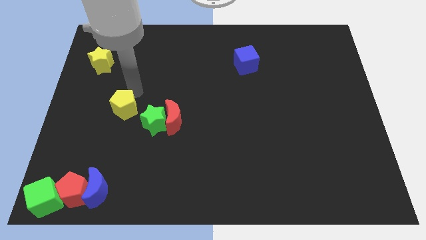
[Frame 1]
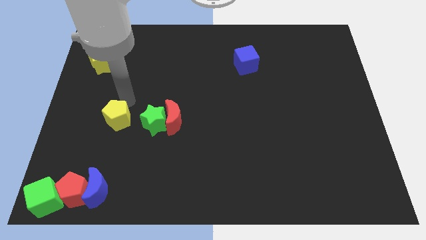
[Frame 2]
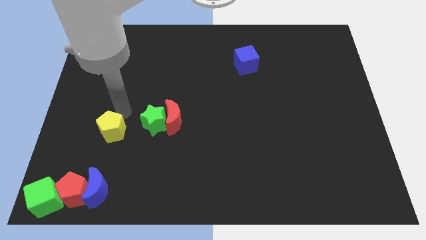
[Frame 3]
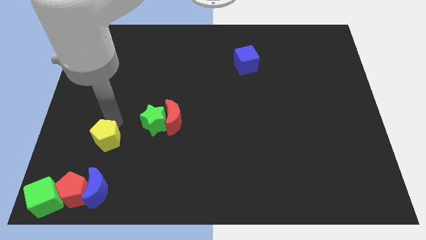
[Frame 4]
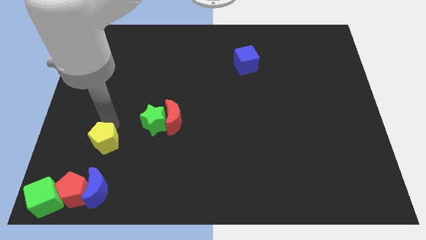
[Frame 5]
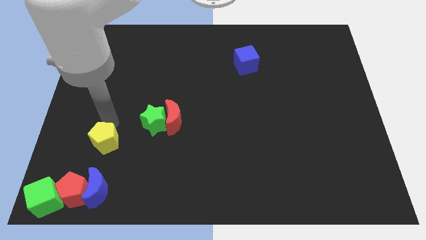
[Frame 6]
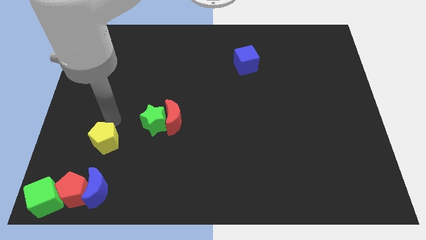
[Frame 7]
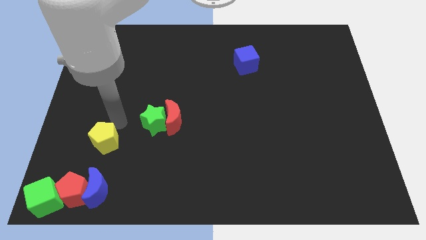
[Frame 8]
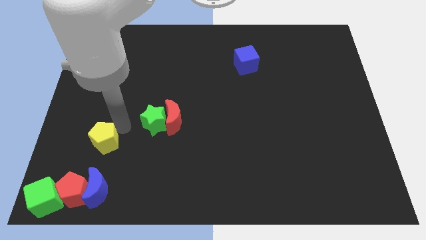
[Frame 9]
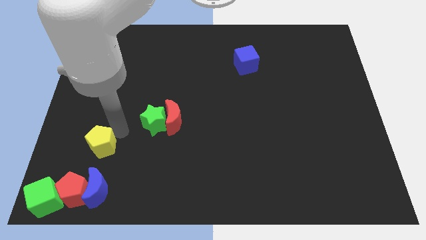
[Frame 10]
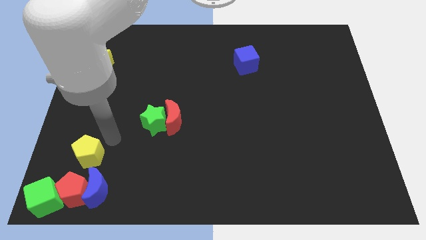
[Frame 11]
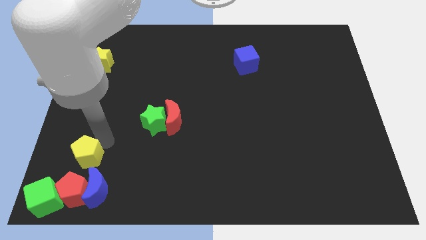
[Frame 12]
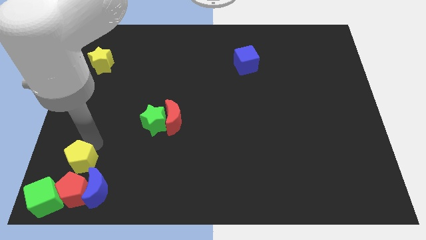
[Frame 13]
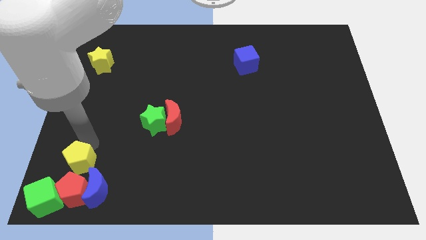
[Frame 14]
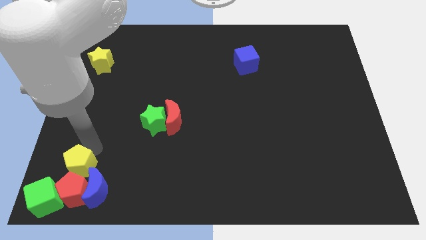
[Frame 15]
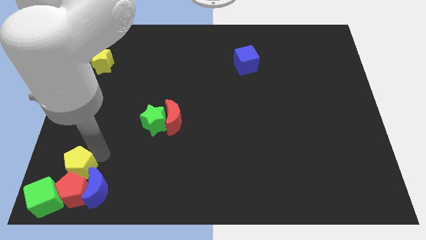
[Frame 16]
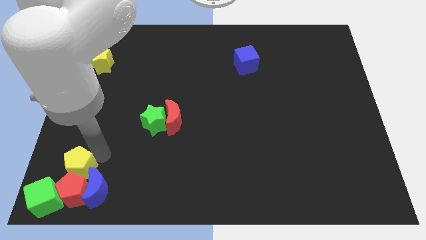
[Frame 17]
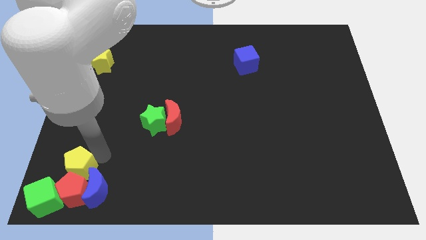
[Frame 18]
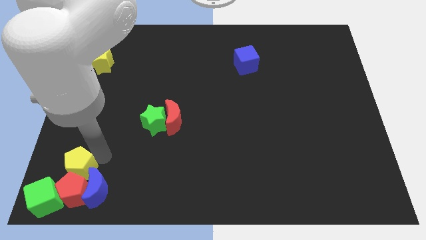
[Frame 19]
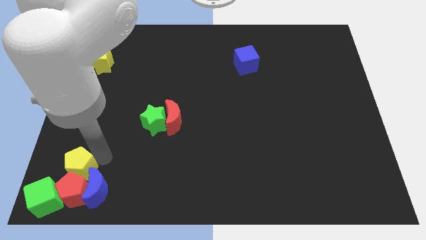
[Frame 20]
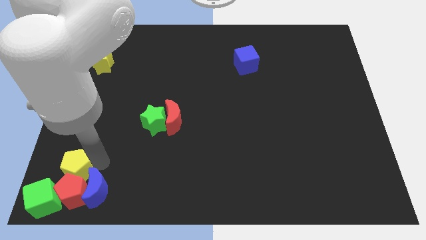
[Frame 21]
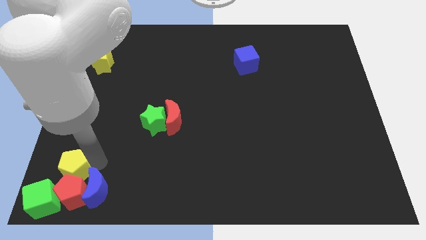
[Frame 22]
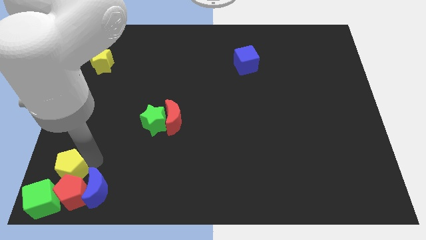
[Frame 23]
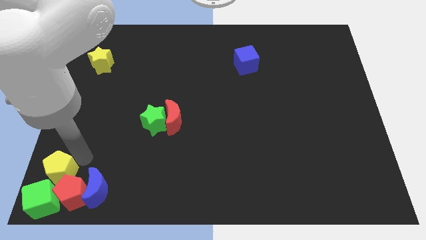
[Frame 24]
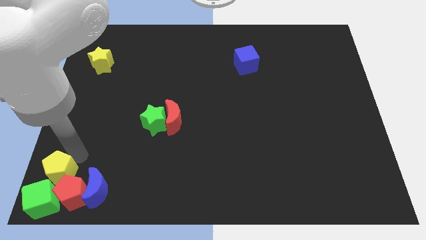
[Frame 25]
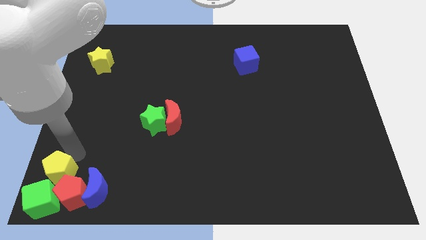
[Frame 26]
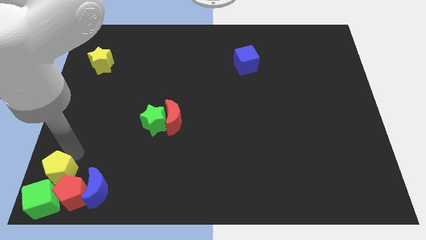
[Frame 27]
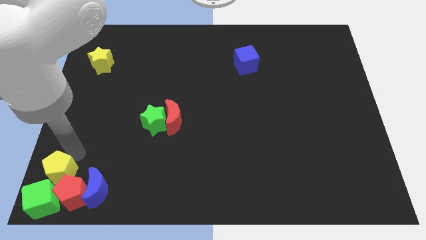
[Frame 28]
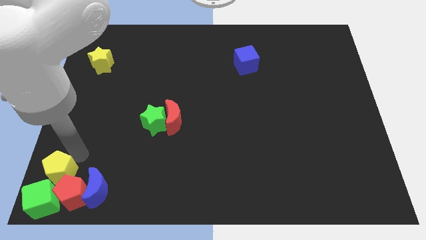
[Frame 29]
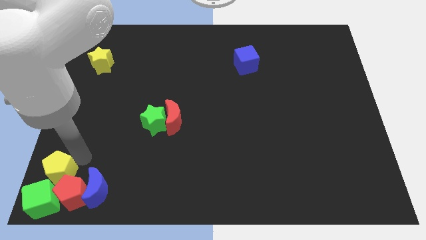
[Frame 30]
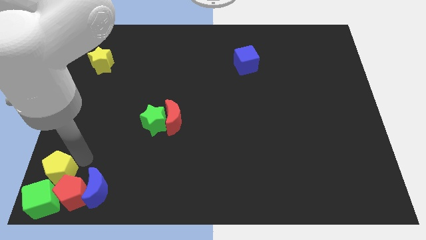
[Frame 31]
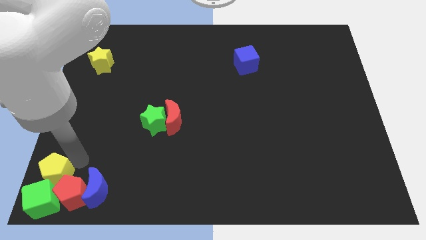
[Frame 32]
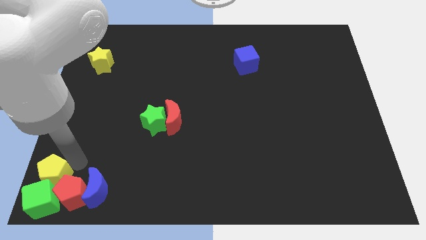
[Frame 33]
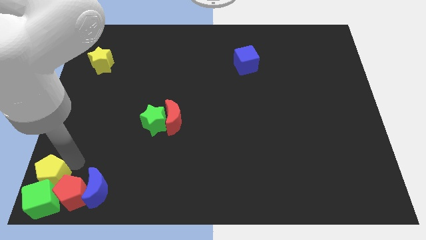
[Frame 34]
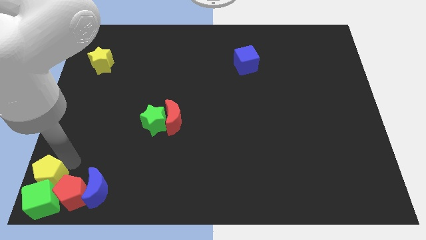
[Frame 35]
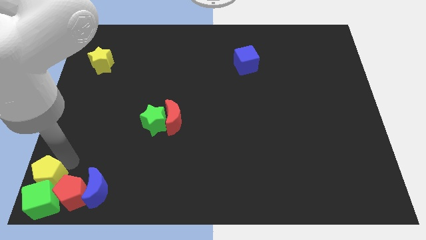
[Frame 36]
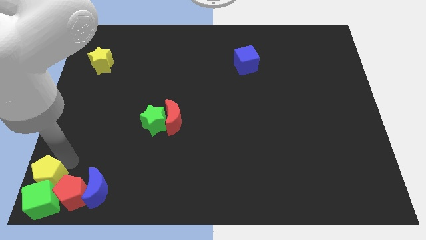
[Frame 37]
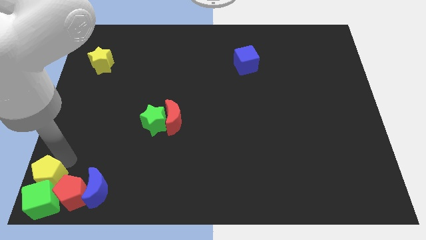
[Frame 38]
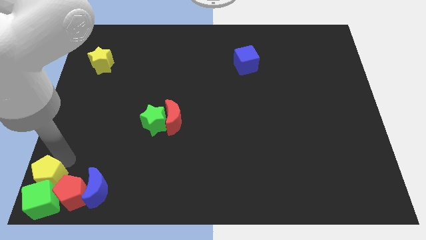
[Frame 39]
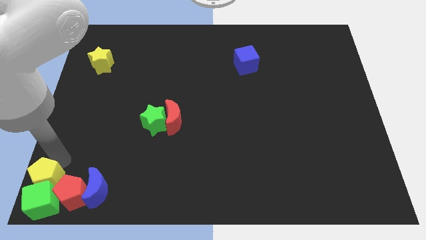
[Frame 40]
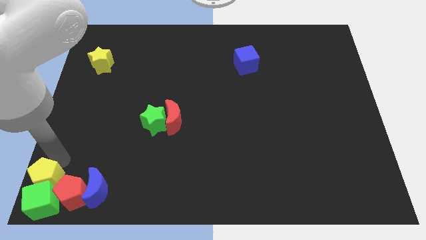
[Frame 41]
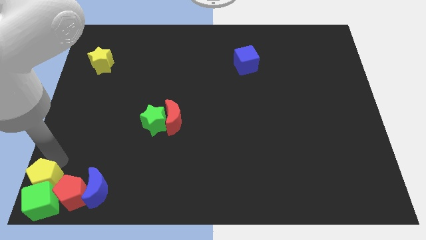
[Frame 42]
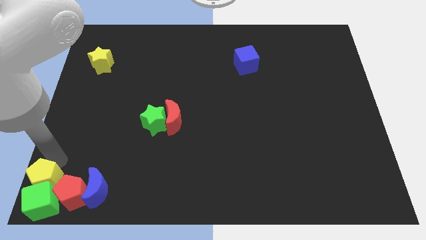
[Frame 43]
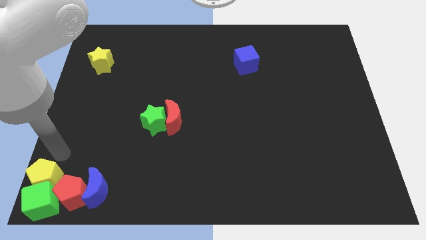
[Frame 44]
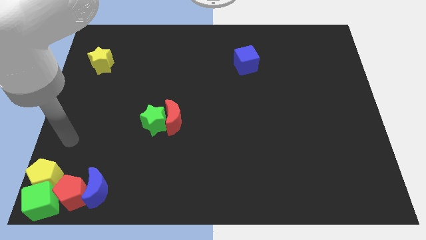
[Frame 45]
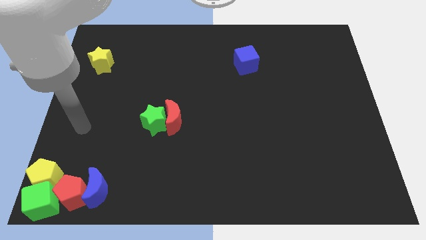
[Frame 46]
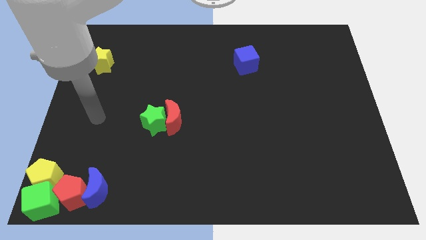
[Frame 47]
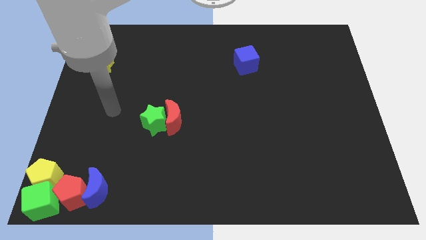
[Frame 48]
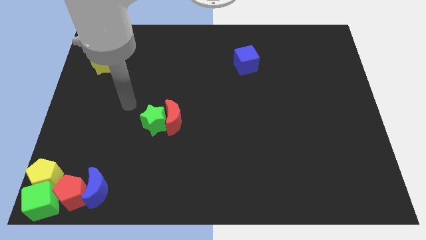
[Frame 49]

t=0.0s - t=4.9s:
place the yellow pentagon to the top of the green cube

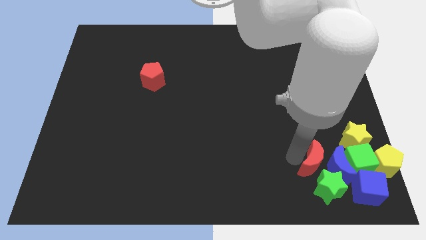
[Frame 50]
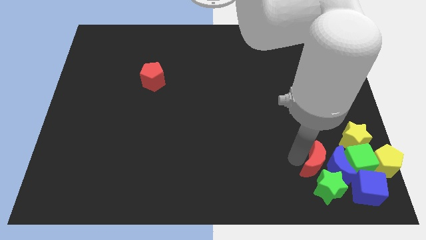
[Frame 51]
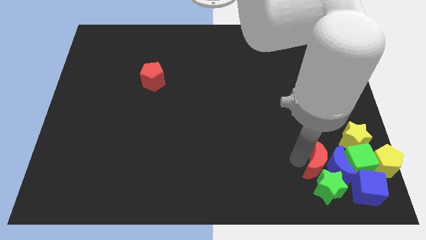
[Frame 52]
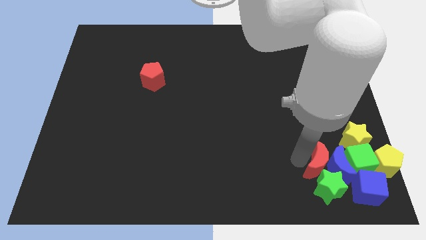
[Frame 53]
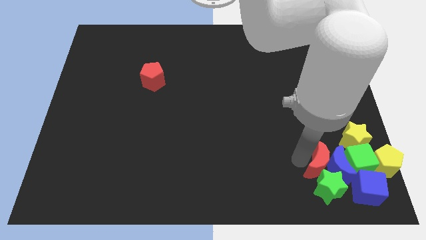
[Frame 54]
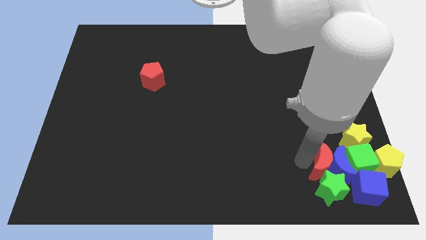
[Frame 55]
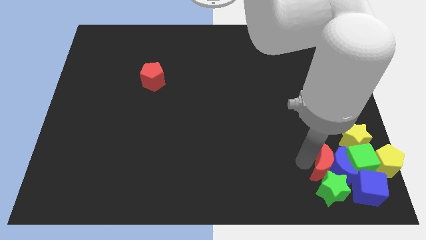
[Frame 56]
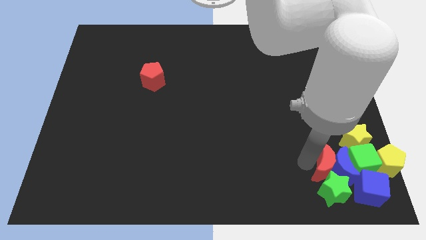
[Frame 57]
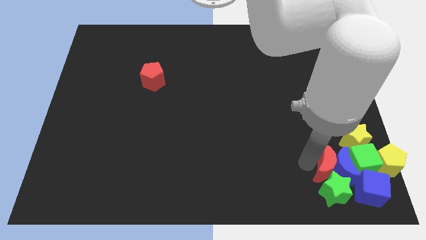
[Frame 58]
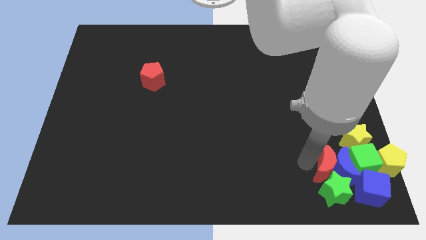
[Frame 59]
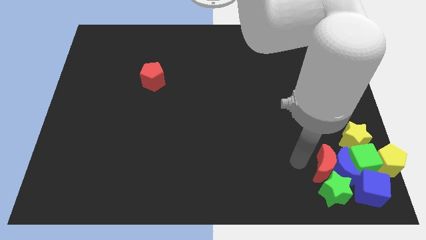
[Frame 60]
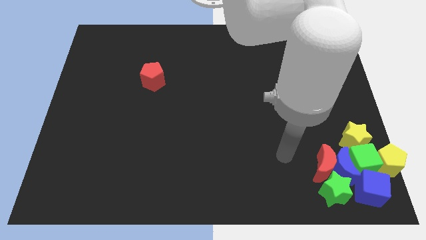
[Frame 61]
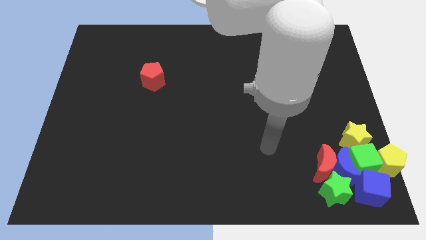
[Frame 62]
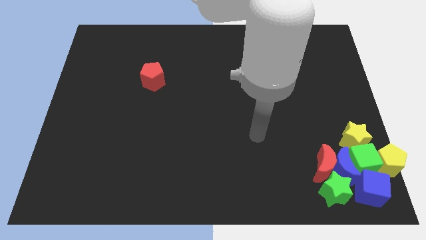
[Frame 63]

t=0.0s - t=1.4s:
slightly push red moon into the group of blocks

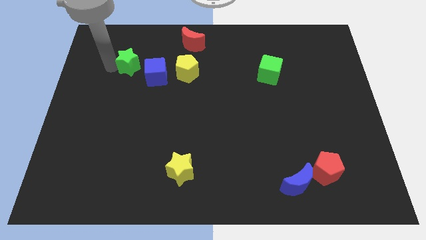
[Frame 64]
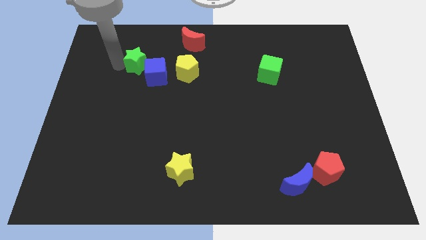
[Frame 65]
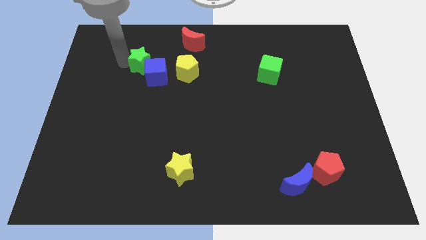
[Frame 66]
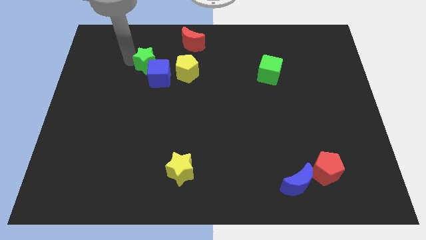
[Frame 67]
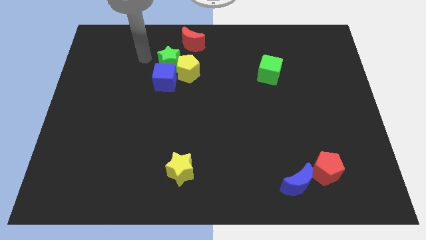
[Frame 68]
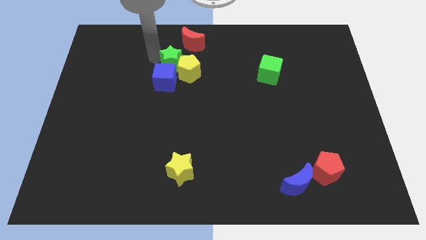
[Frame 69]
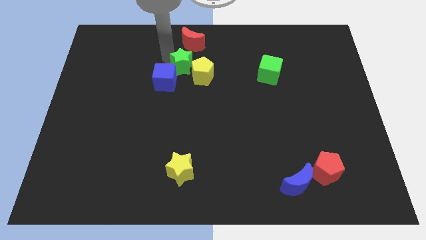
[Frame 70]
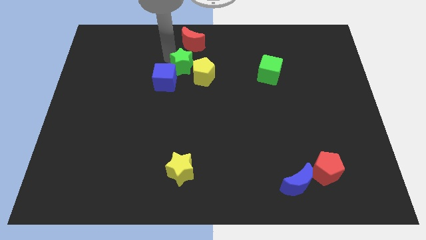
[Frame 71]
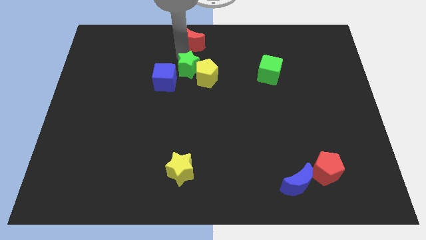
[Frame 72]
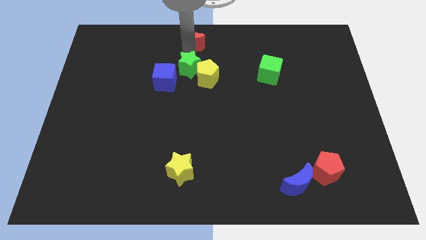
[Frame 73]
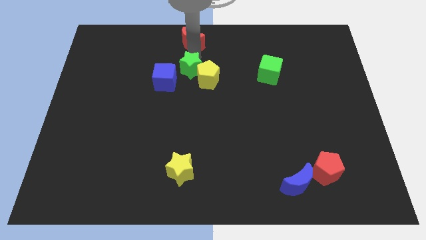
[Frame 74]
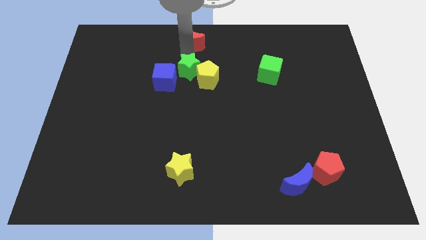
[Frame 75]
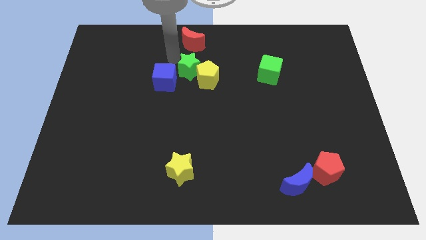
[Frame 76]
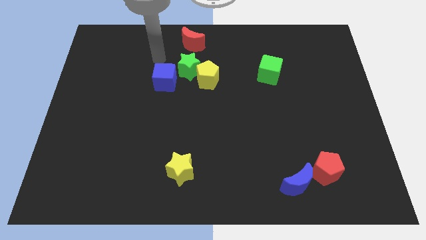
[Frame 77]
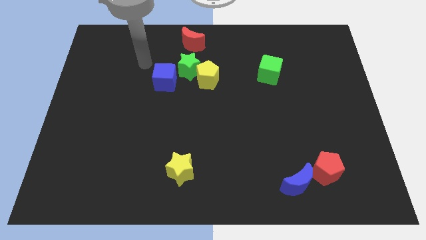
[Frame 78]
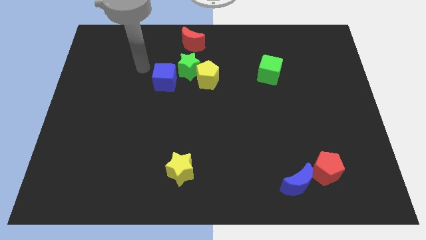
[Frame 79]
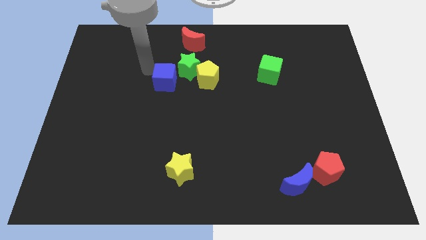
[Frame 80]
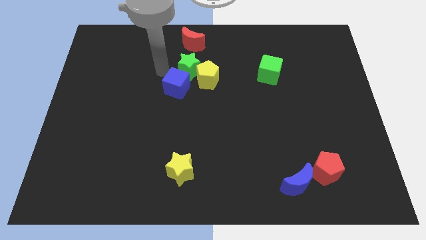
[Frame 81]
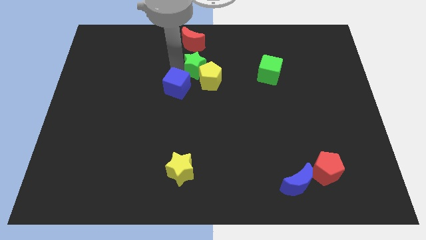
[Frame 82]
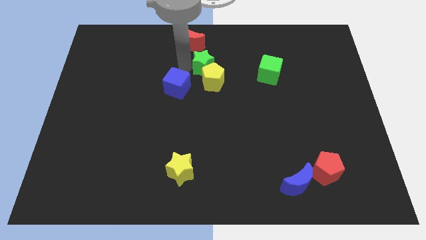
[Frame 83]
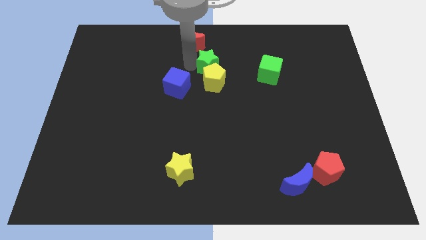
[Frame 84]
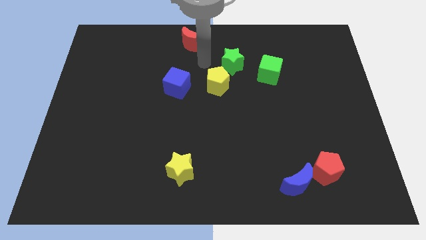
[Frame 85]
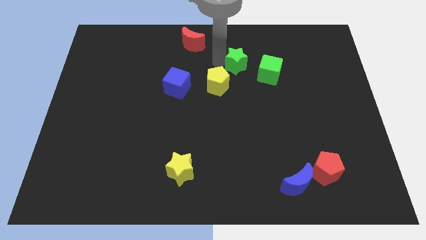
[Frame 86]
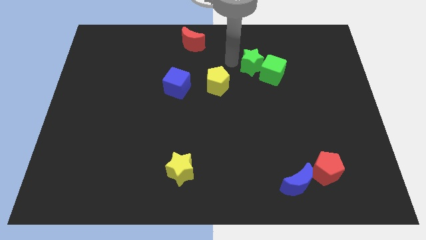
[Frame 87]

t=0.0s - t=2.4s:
push the green star into the yellow pentagon

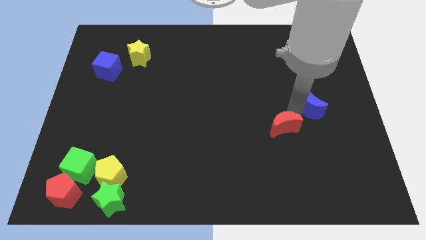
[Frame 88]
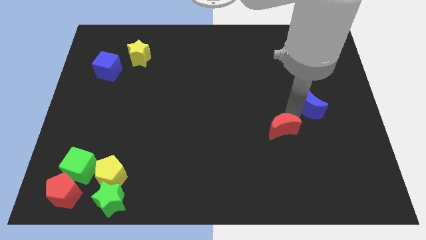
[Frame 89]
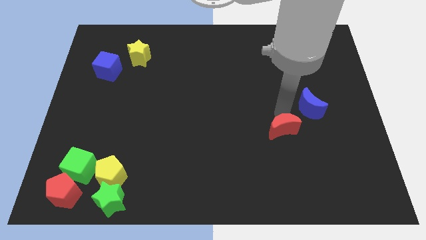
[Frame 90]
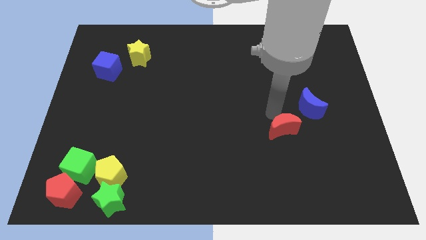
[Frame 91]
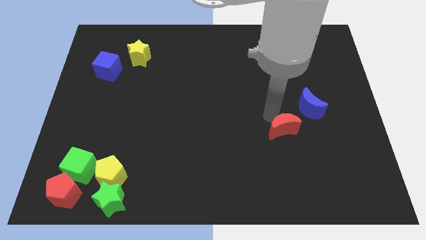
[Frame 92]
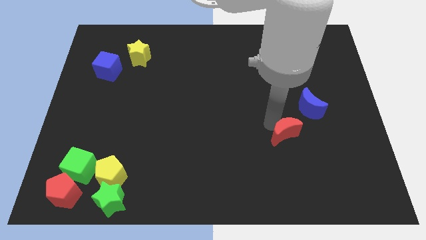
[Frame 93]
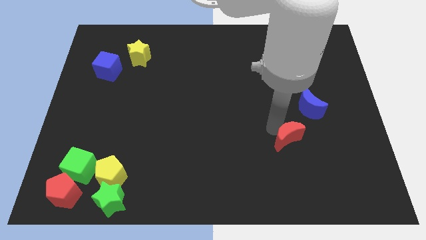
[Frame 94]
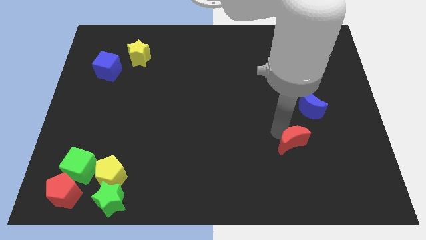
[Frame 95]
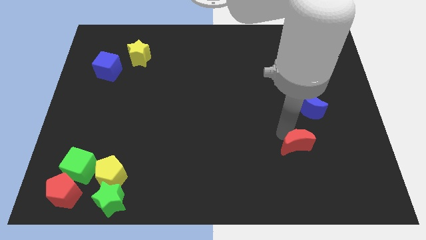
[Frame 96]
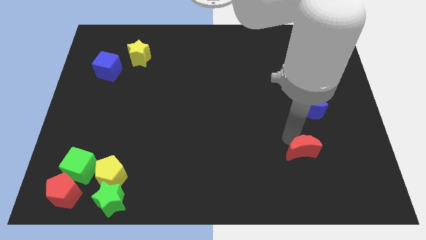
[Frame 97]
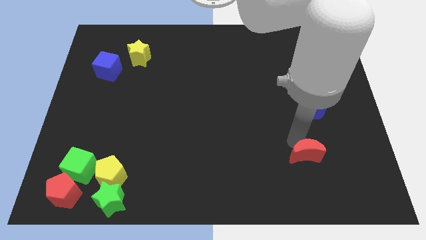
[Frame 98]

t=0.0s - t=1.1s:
put the red moon below the blue moon
